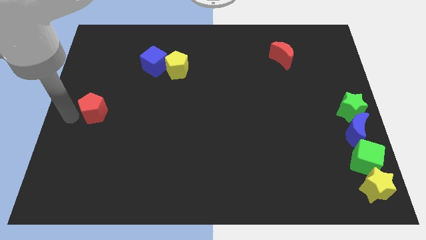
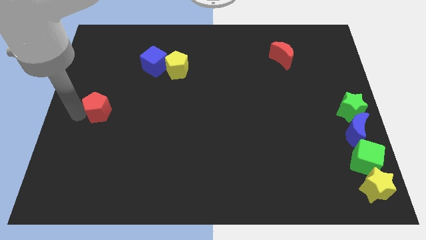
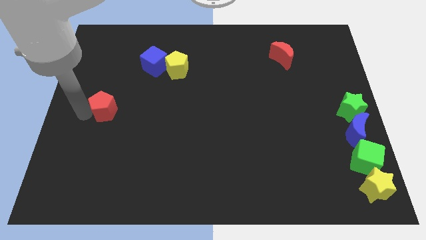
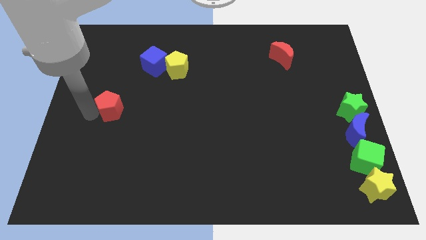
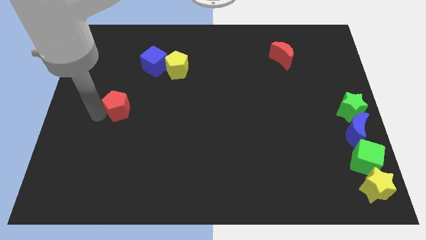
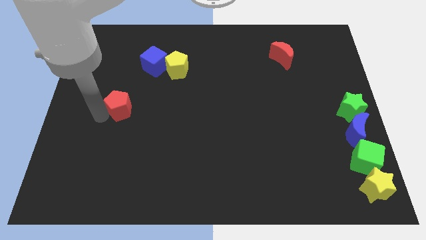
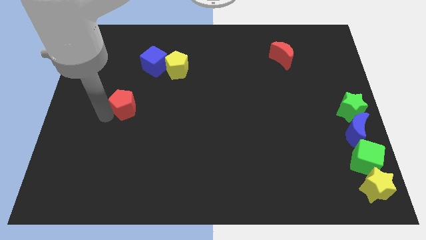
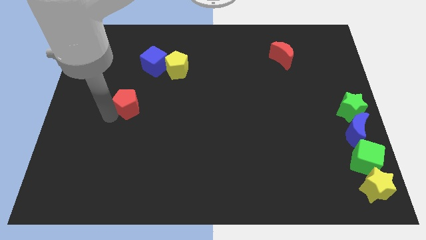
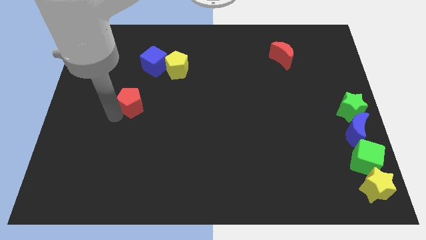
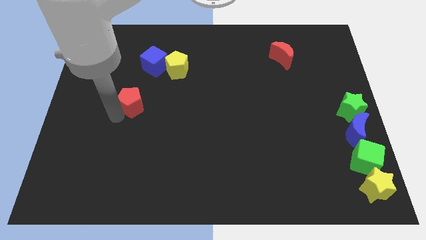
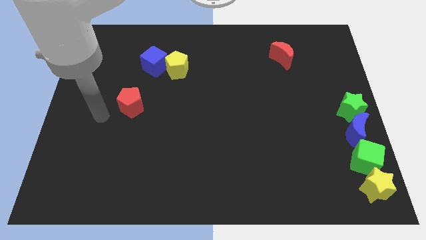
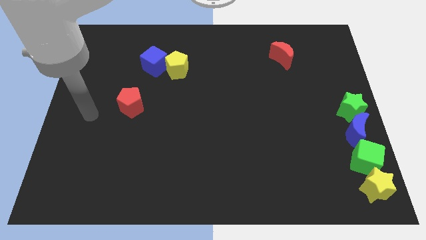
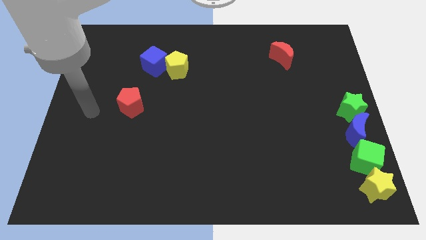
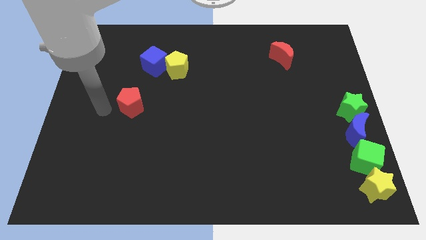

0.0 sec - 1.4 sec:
push red pentagon slightly to the right

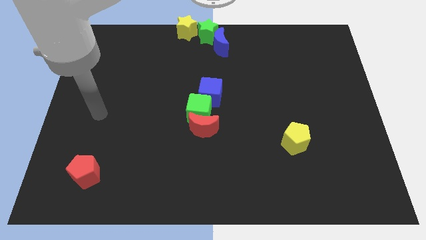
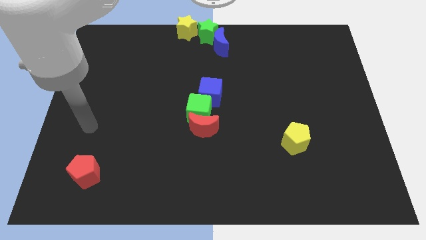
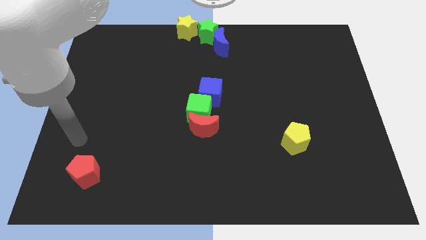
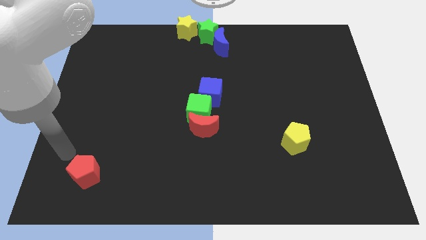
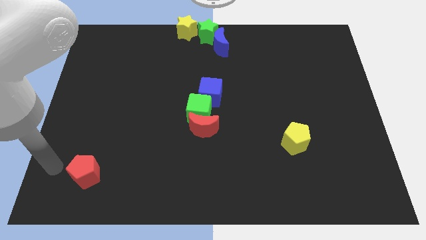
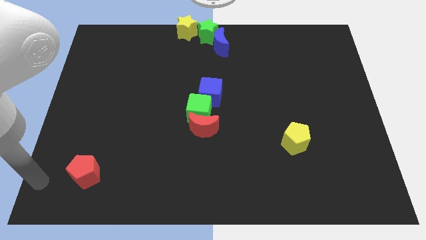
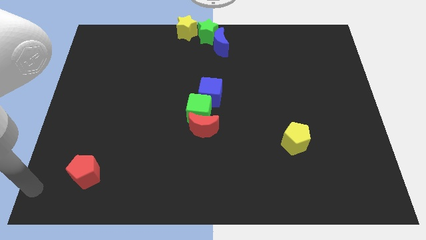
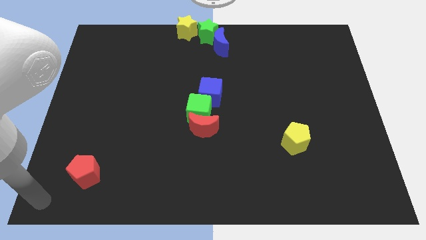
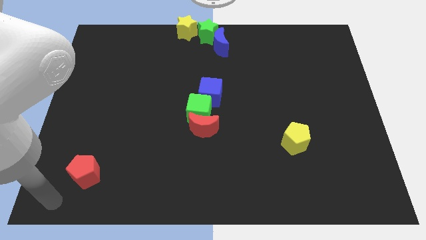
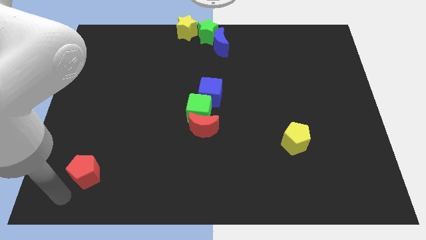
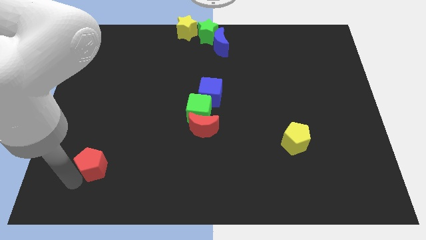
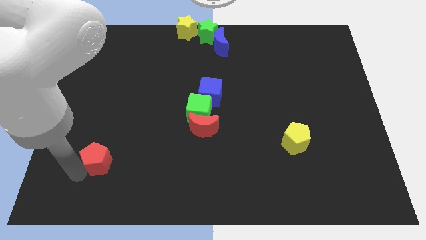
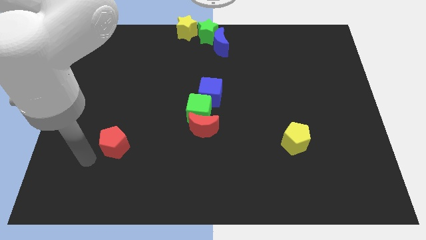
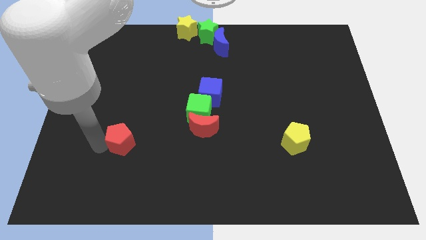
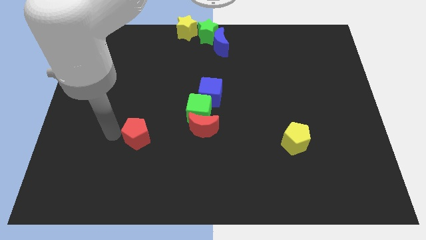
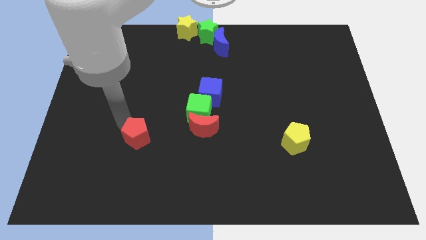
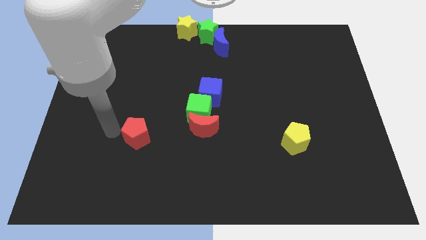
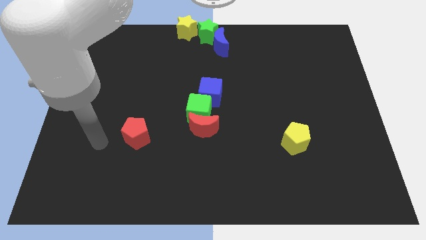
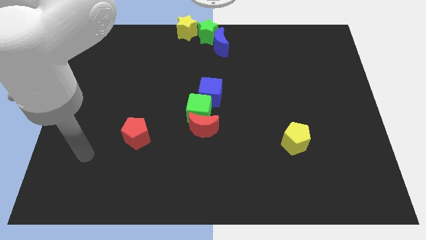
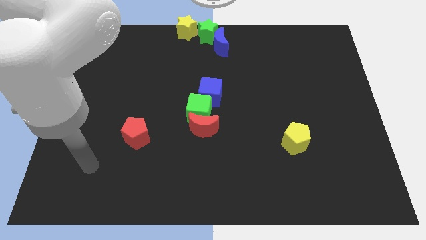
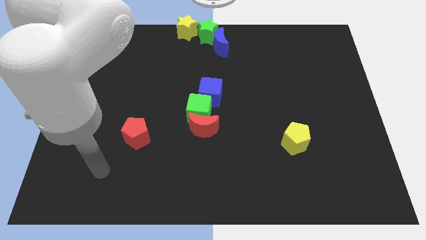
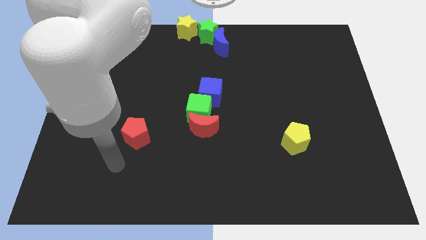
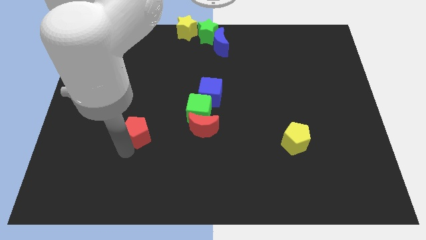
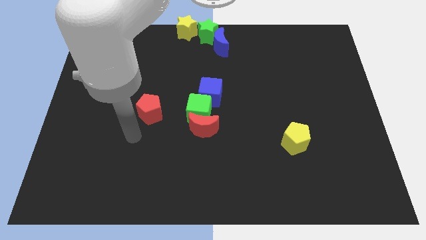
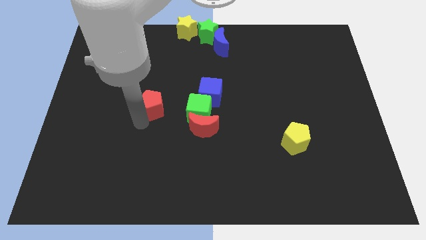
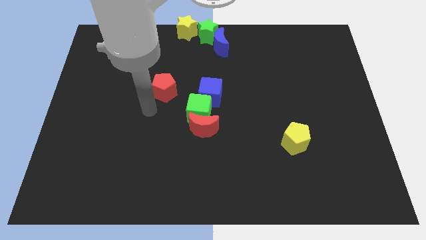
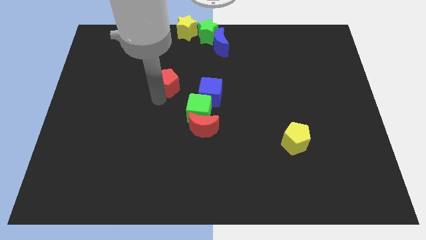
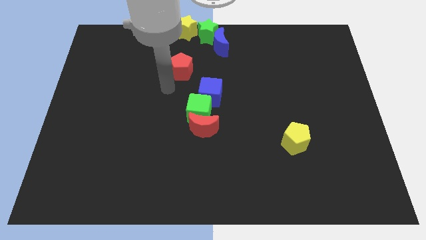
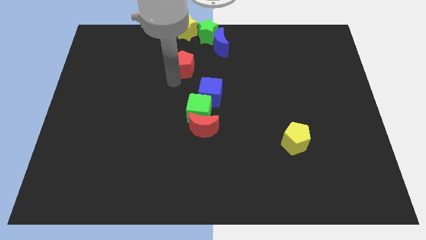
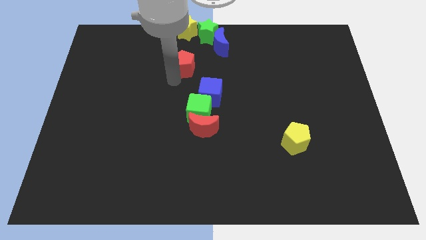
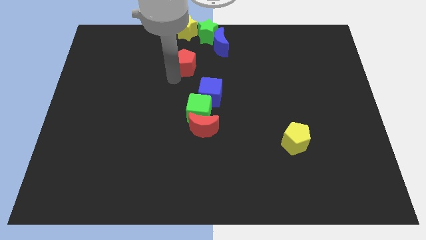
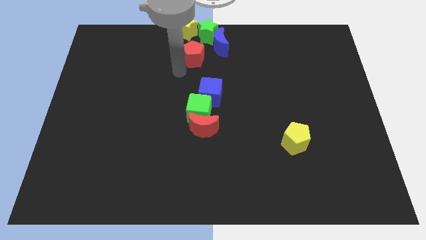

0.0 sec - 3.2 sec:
move the red pentagon diagonally top left to the green cube

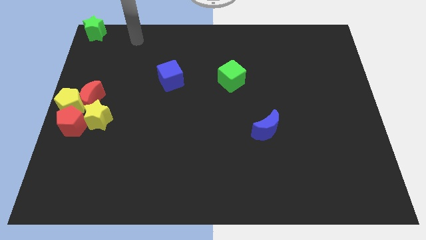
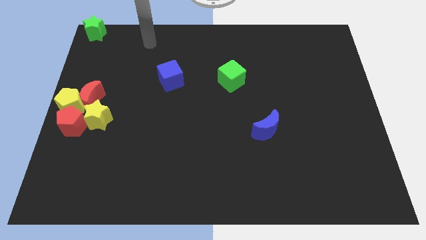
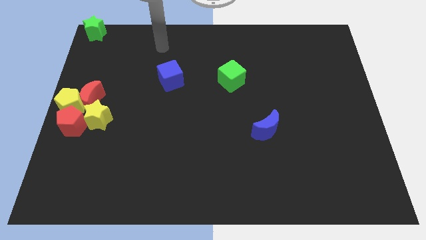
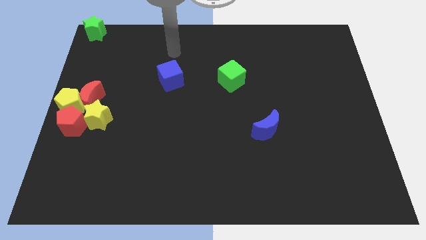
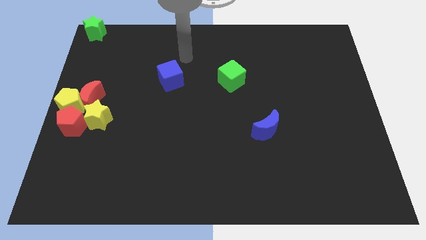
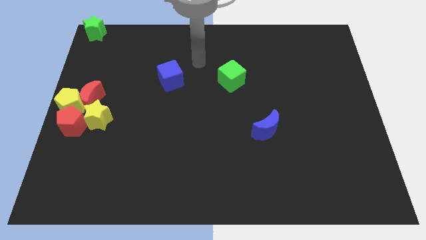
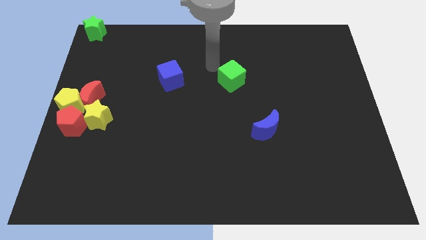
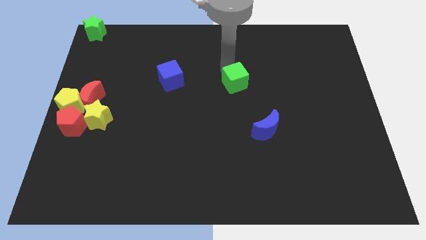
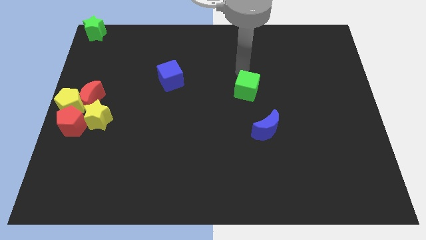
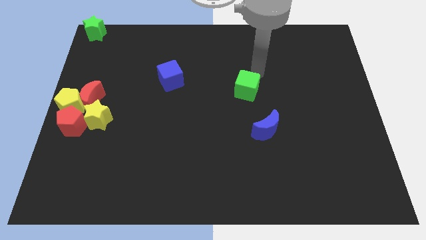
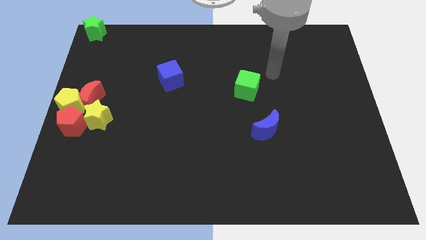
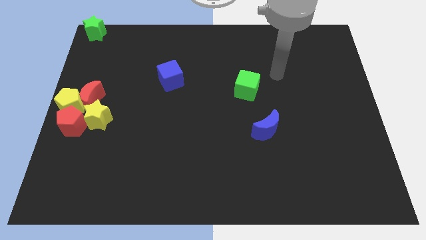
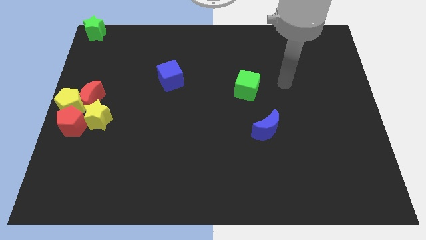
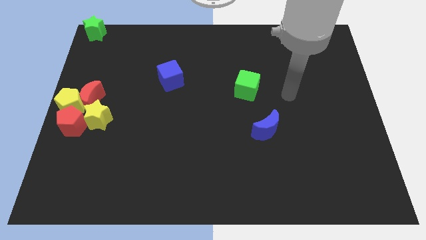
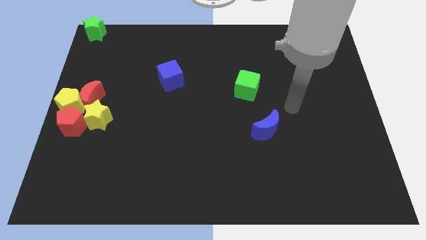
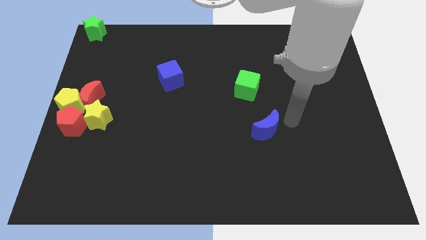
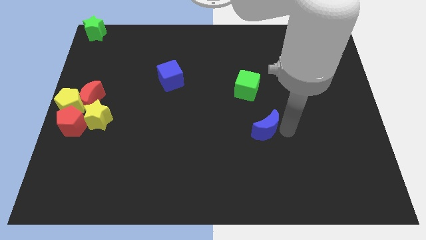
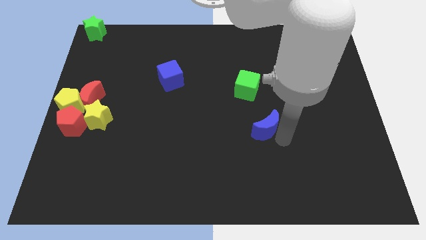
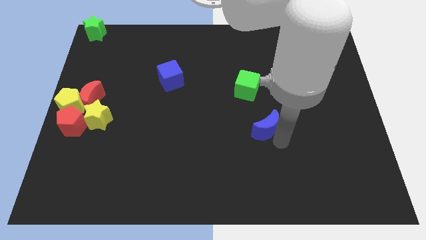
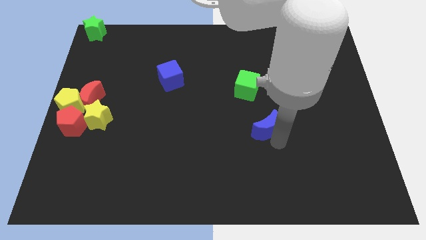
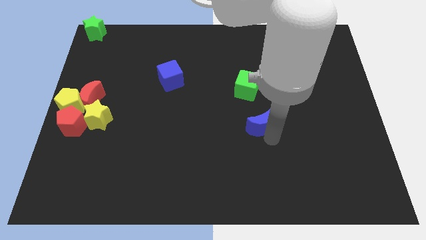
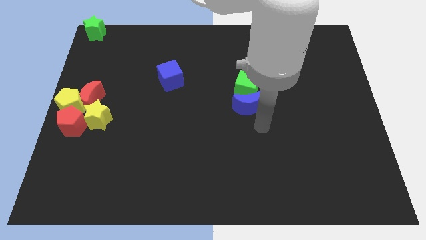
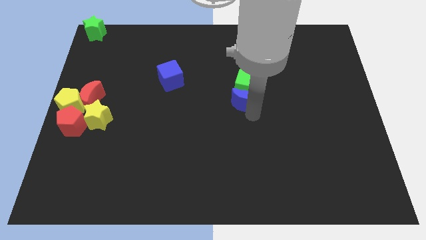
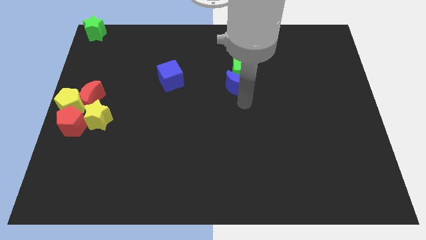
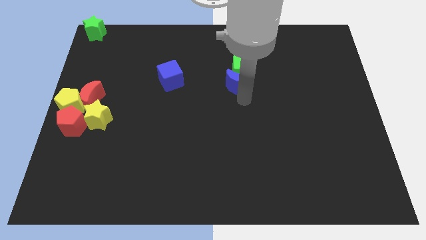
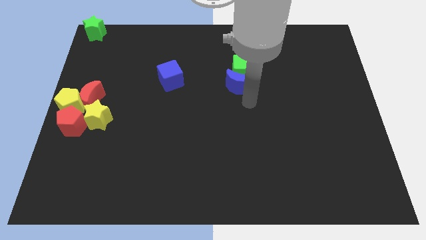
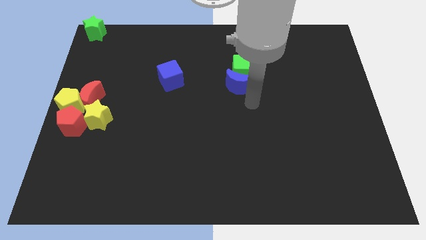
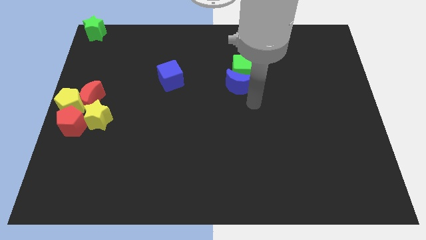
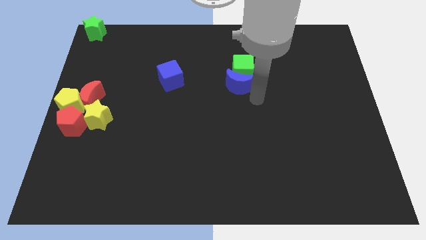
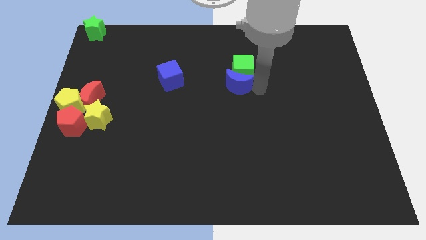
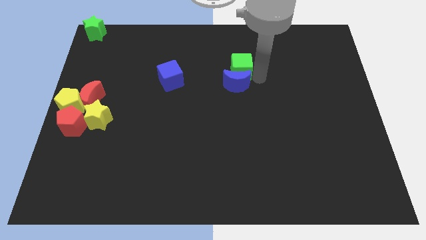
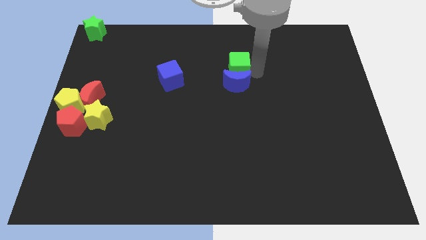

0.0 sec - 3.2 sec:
move the blue crescent parallel to the blue cube

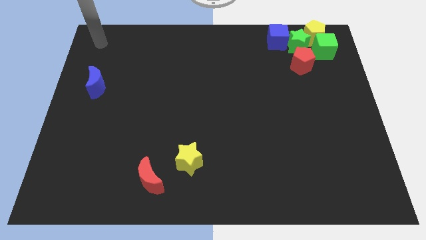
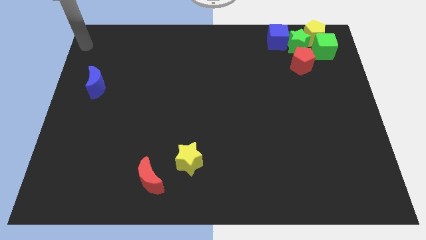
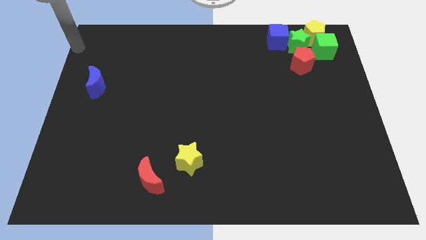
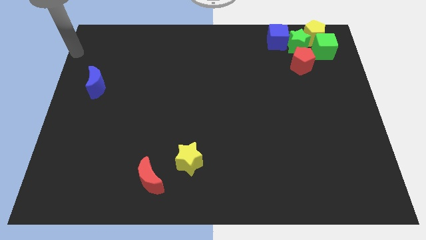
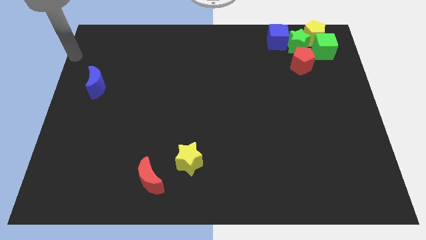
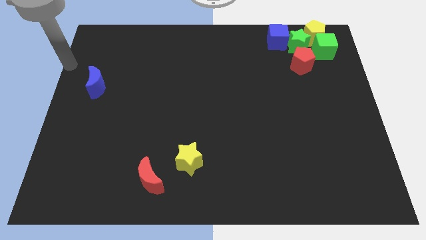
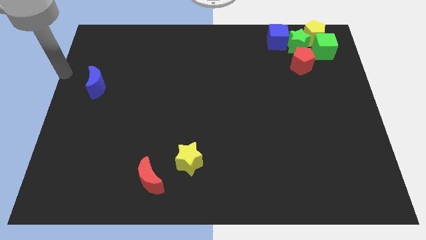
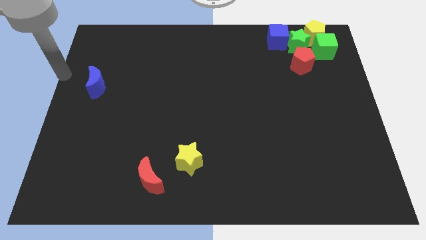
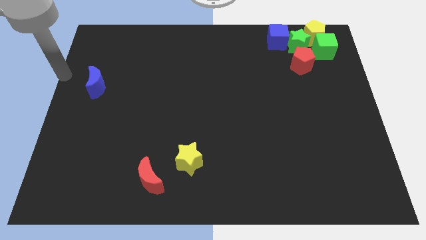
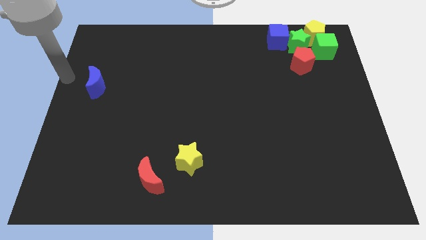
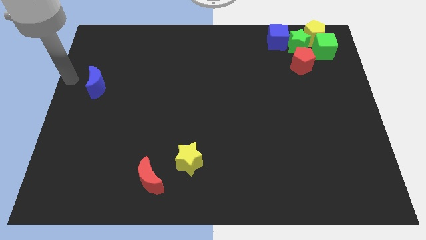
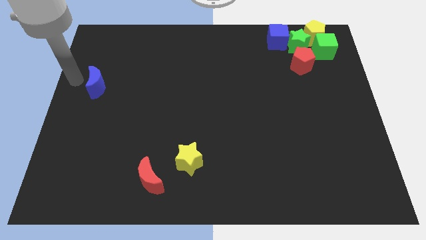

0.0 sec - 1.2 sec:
move your hand towards the blue crescent

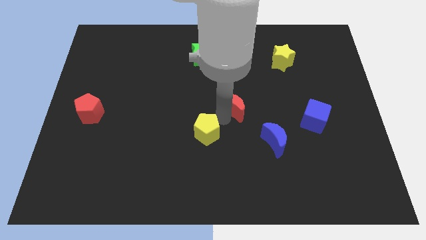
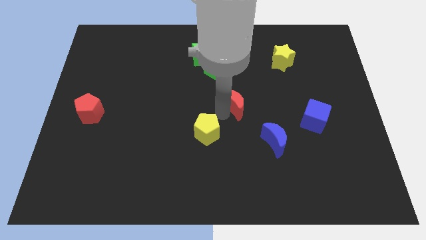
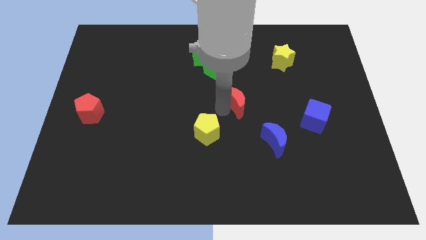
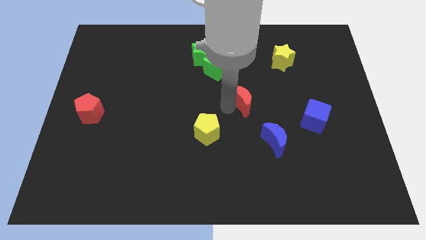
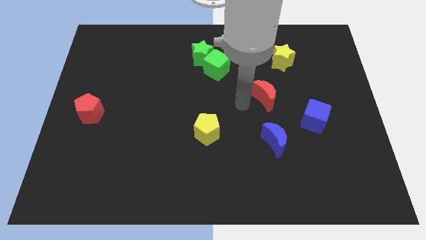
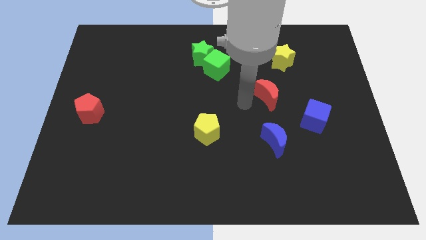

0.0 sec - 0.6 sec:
place the red moon above the blue moon
